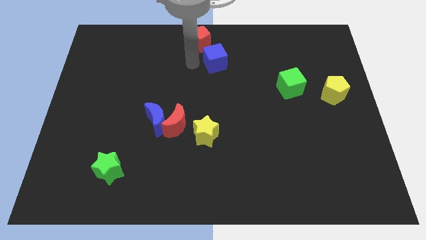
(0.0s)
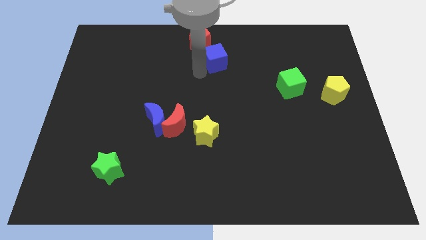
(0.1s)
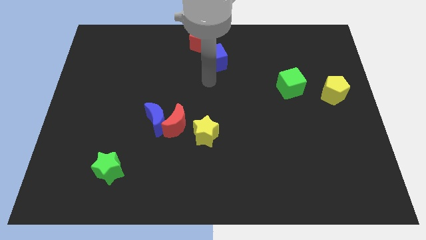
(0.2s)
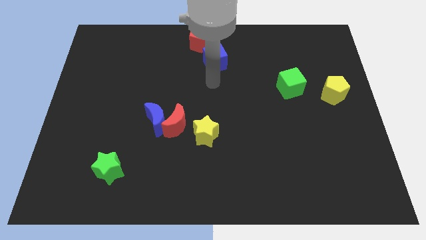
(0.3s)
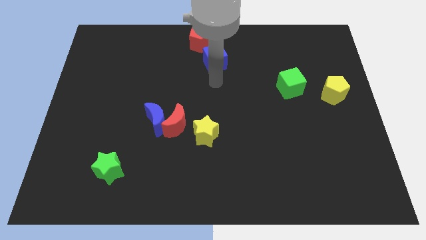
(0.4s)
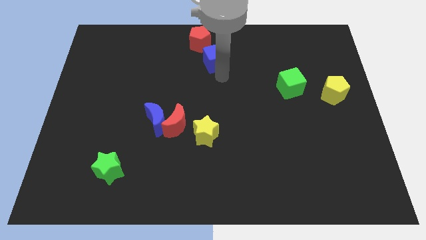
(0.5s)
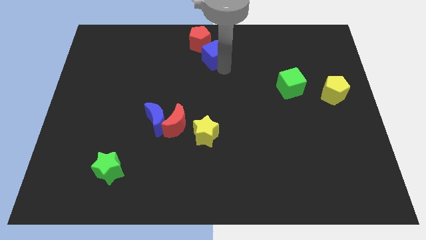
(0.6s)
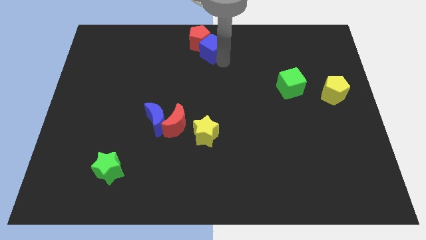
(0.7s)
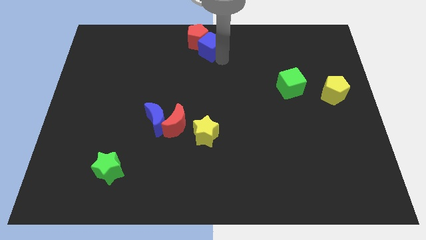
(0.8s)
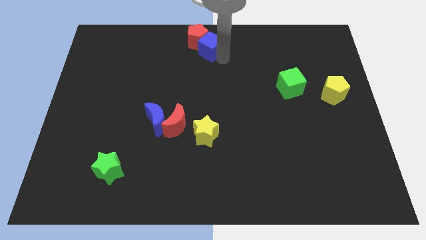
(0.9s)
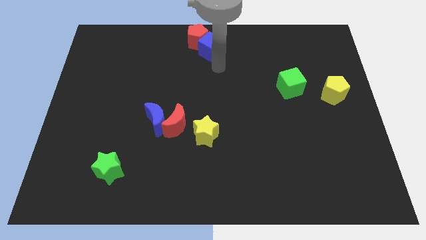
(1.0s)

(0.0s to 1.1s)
push blue cube into the red pentagon

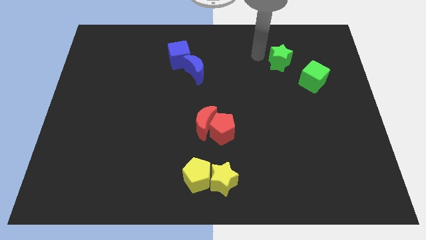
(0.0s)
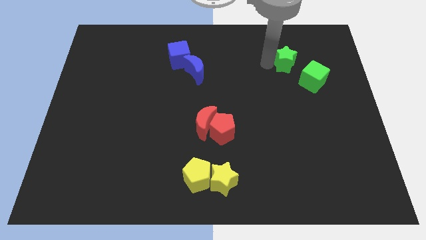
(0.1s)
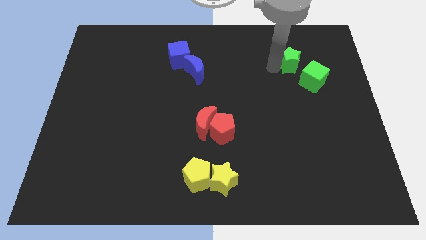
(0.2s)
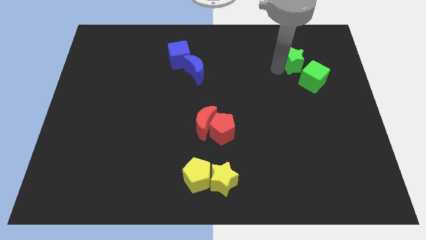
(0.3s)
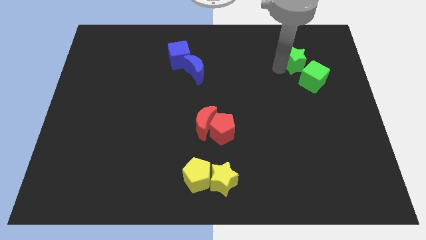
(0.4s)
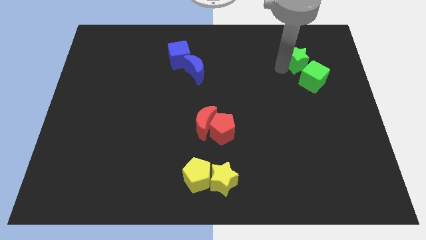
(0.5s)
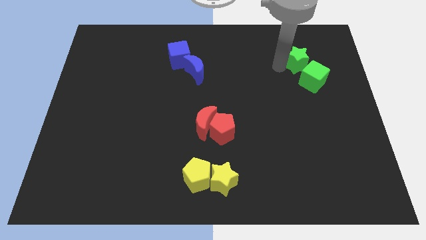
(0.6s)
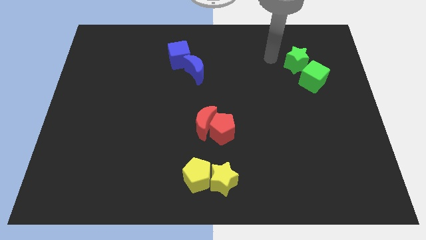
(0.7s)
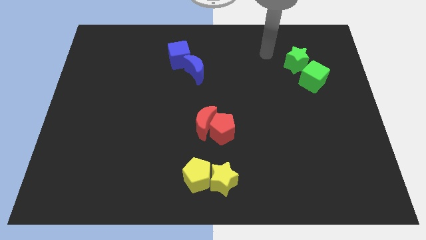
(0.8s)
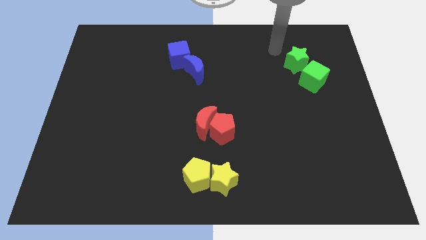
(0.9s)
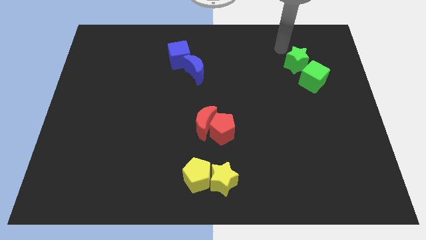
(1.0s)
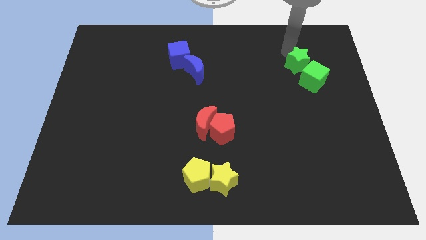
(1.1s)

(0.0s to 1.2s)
push the green star into the green cube

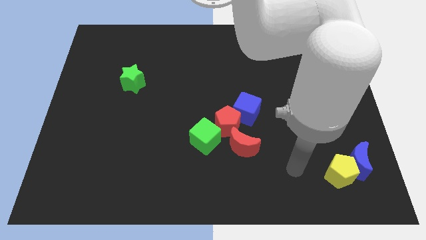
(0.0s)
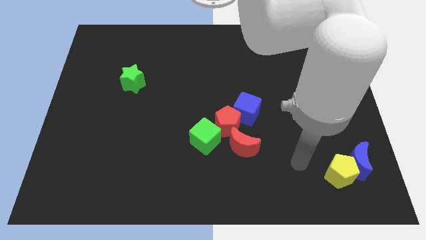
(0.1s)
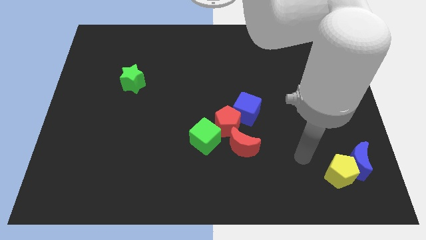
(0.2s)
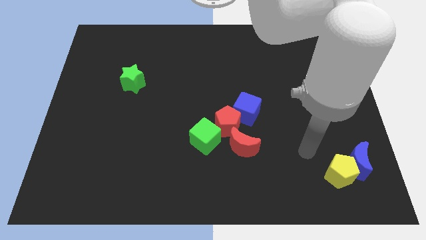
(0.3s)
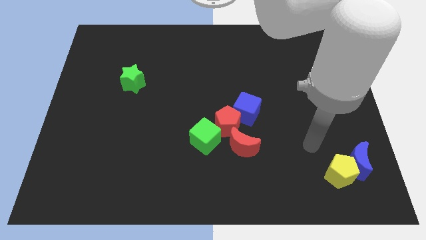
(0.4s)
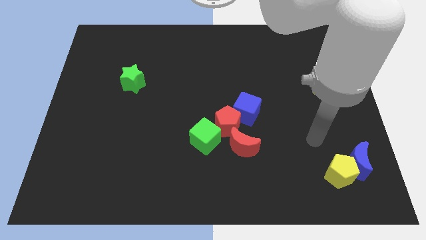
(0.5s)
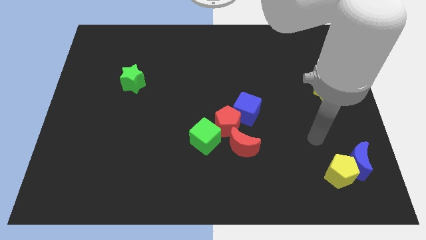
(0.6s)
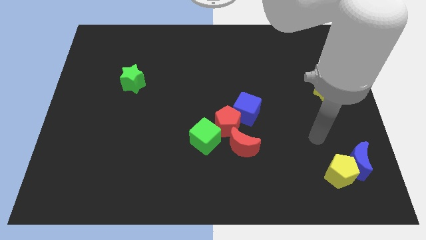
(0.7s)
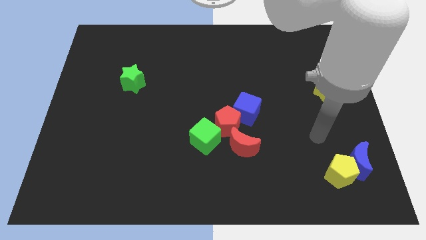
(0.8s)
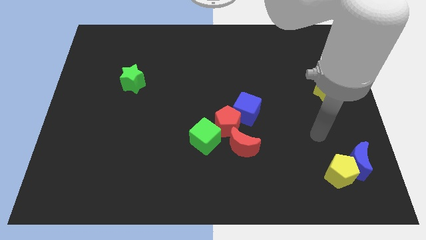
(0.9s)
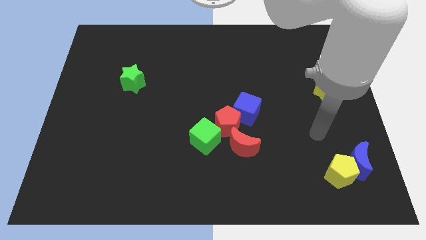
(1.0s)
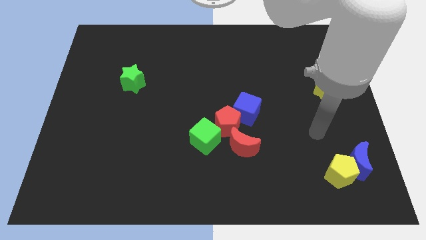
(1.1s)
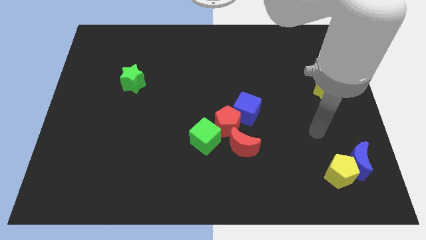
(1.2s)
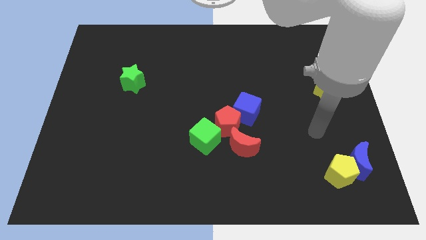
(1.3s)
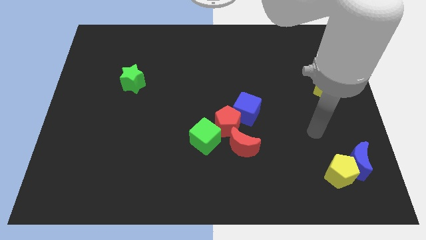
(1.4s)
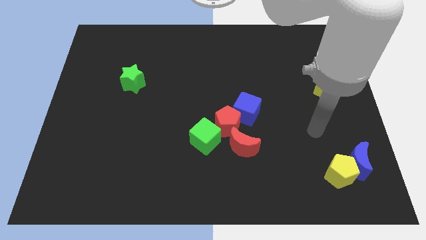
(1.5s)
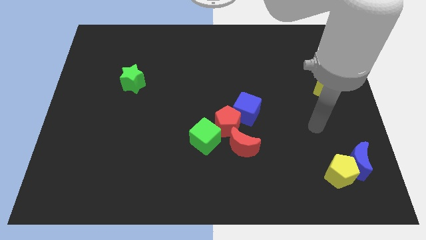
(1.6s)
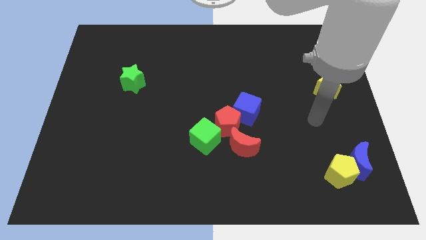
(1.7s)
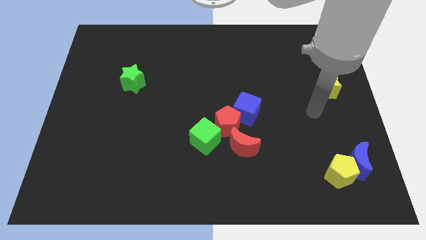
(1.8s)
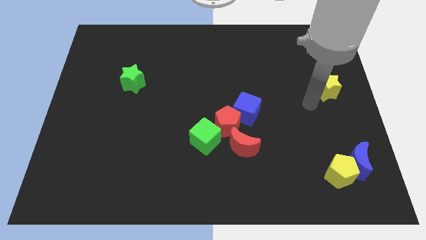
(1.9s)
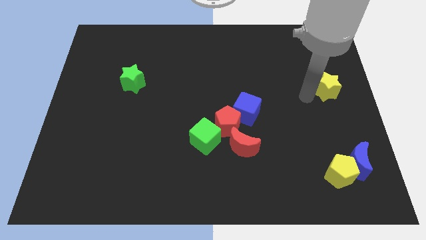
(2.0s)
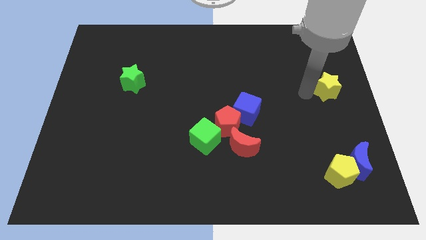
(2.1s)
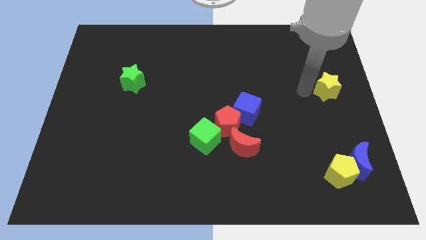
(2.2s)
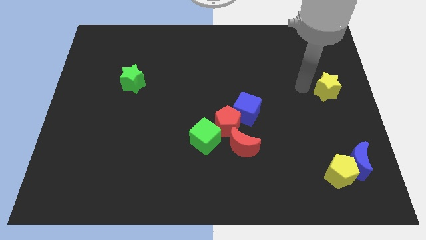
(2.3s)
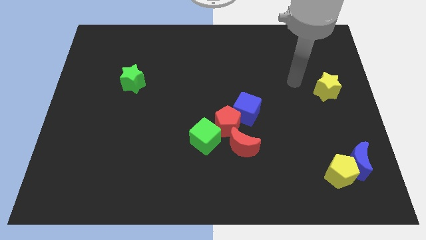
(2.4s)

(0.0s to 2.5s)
point your arm at the left of the yellow star

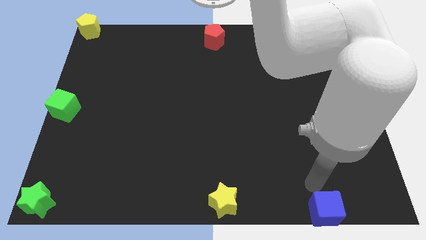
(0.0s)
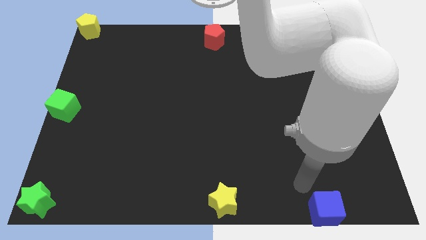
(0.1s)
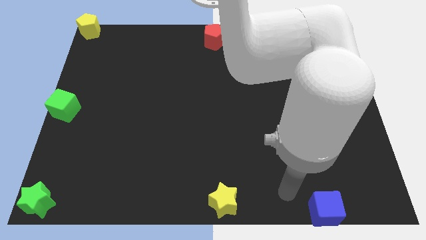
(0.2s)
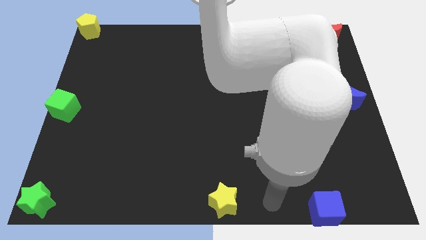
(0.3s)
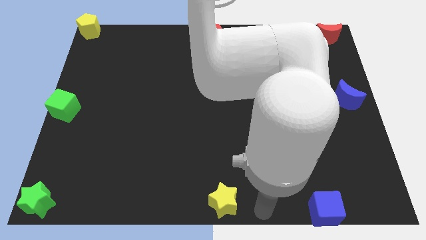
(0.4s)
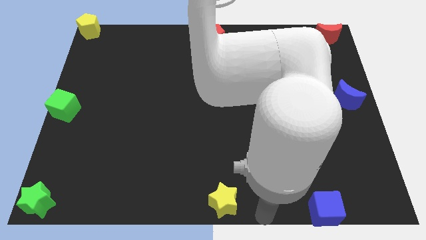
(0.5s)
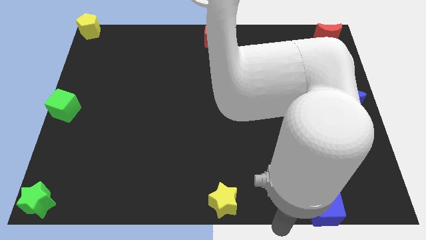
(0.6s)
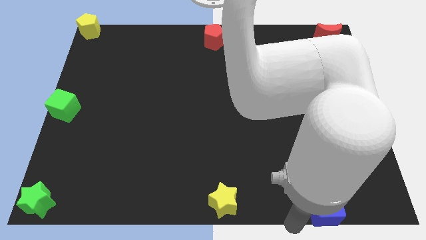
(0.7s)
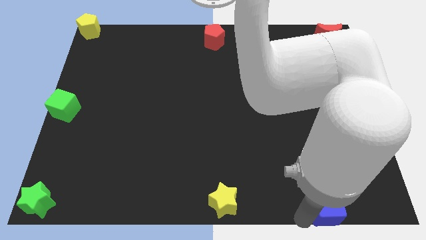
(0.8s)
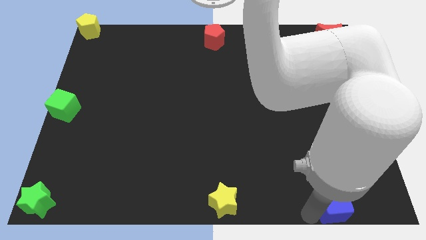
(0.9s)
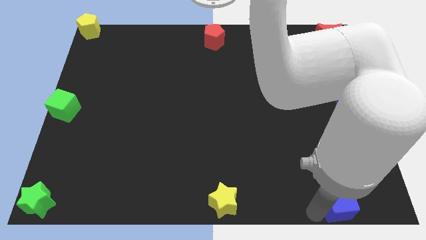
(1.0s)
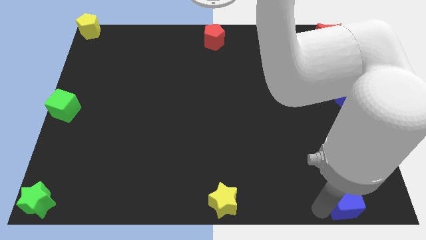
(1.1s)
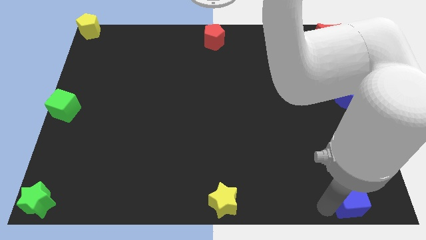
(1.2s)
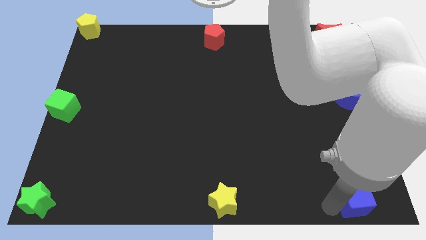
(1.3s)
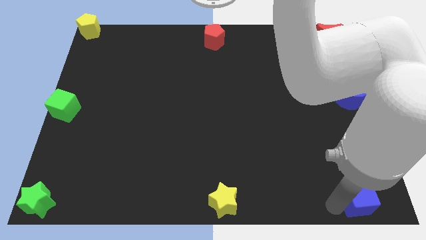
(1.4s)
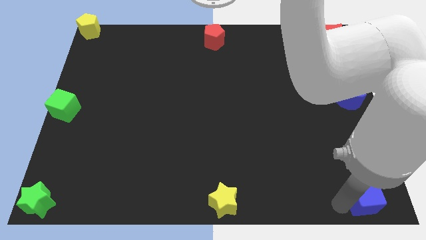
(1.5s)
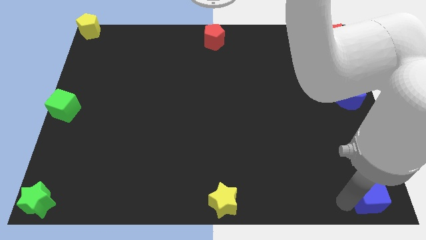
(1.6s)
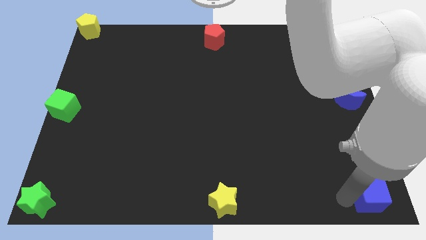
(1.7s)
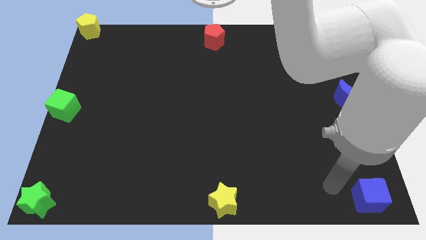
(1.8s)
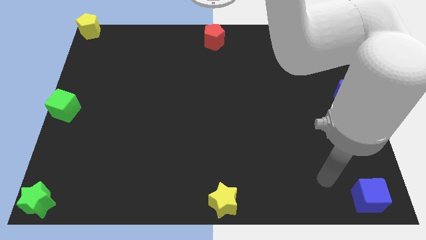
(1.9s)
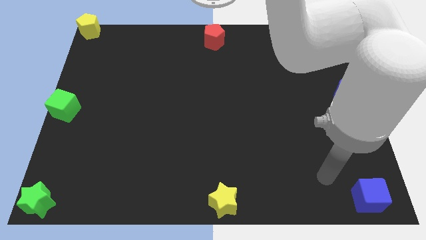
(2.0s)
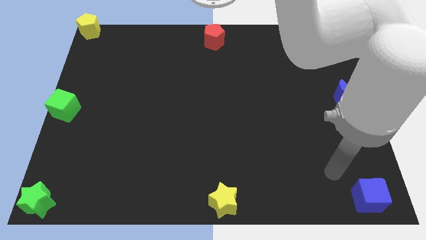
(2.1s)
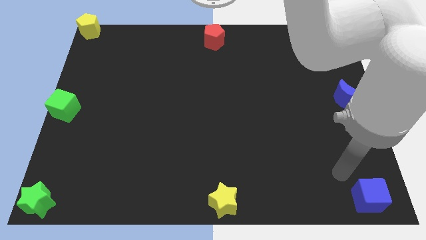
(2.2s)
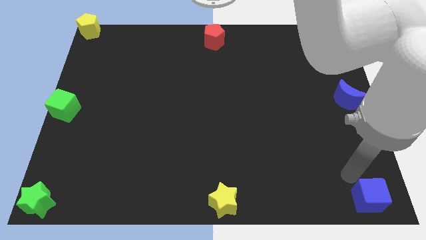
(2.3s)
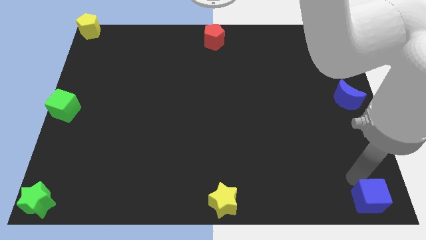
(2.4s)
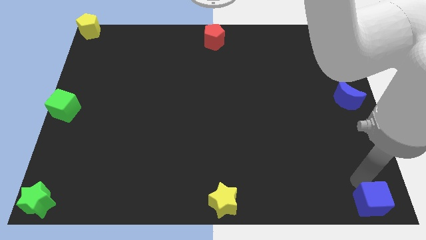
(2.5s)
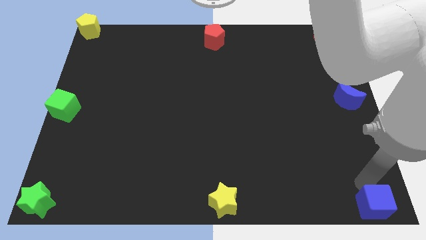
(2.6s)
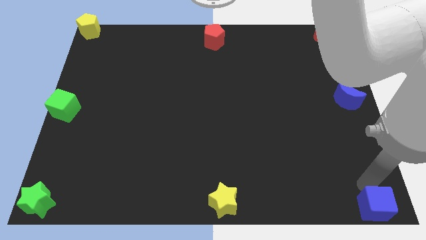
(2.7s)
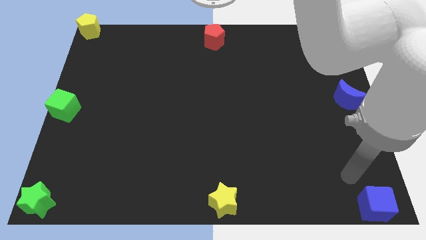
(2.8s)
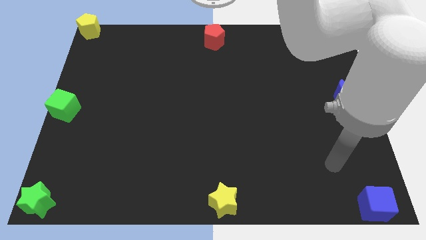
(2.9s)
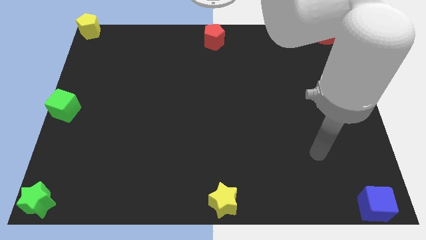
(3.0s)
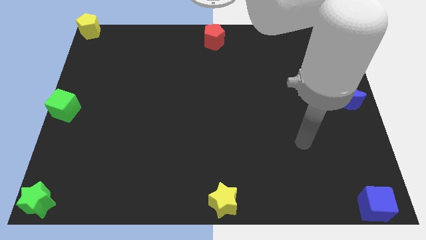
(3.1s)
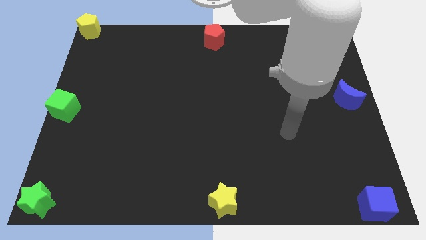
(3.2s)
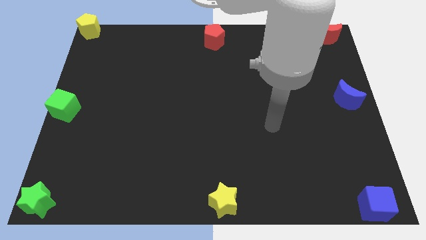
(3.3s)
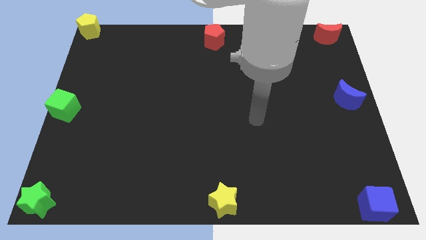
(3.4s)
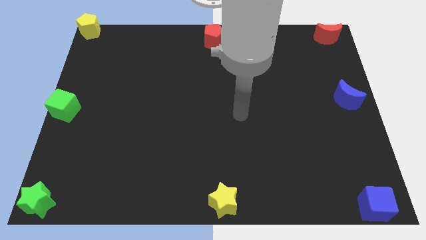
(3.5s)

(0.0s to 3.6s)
place the blue cube to the bottom right of the board

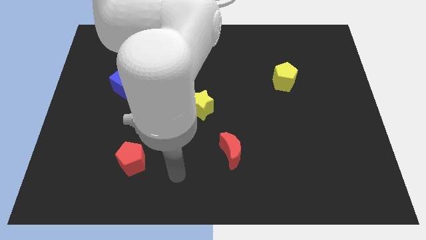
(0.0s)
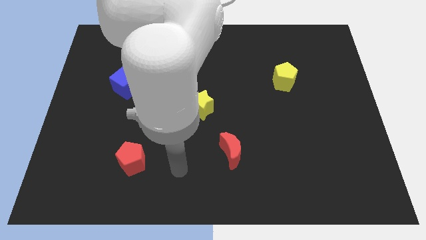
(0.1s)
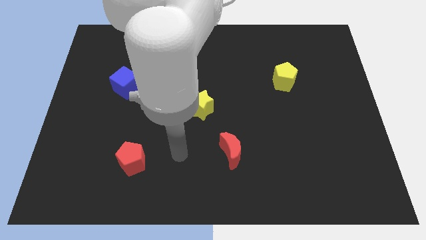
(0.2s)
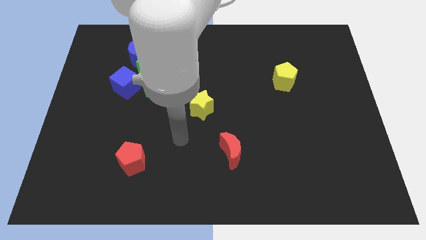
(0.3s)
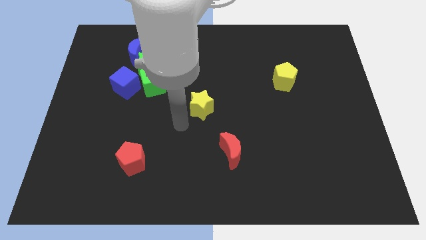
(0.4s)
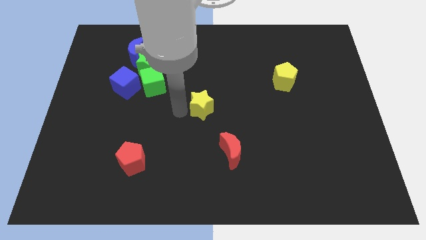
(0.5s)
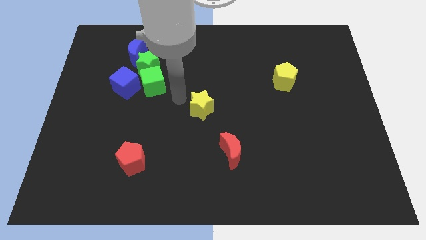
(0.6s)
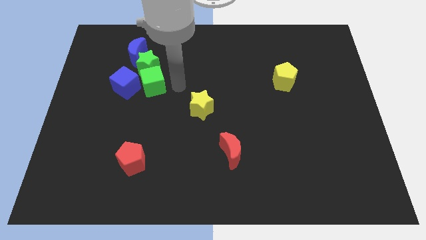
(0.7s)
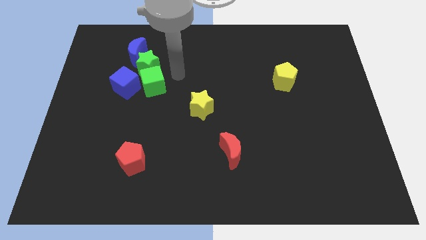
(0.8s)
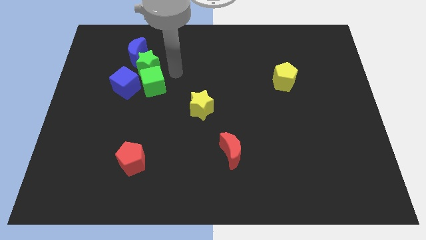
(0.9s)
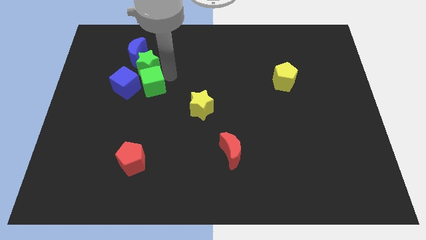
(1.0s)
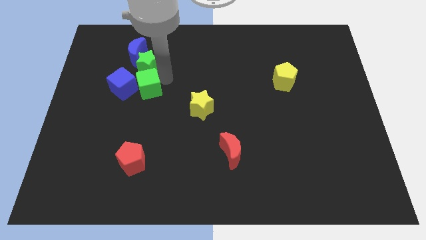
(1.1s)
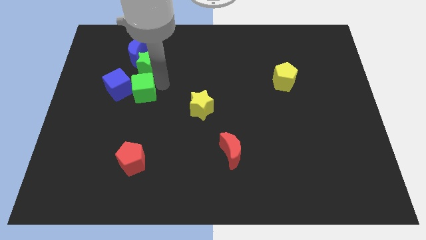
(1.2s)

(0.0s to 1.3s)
tap on the right of green cube
